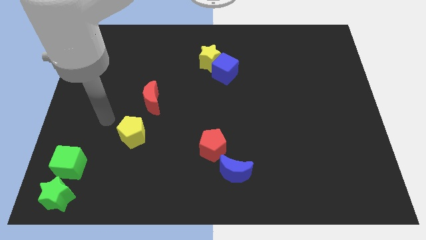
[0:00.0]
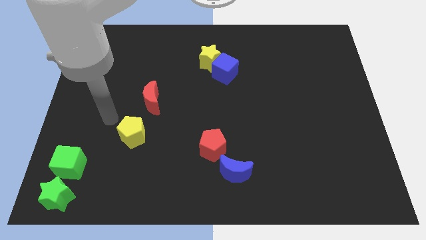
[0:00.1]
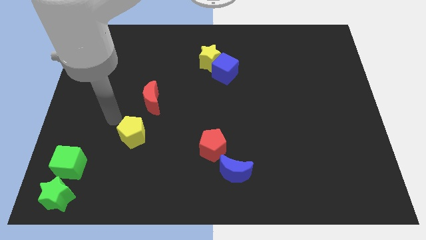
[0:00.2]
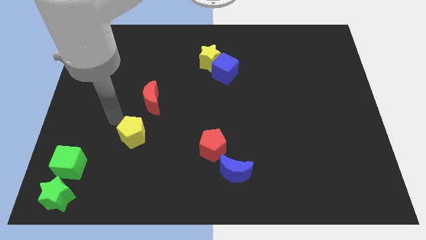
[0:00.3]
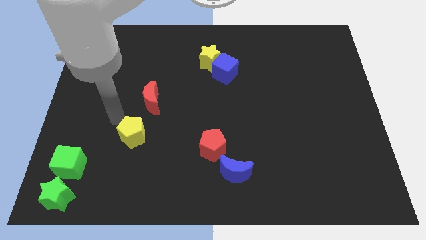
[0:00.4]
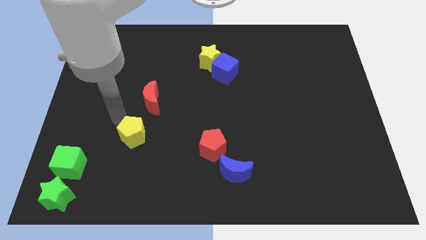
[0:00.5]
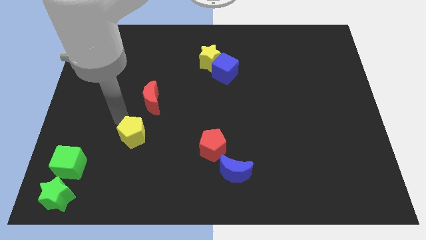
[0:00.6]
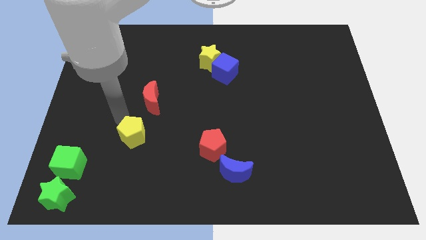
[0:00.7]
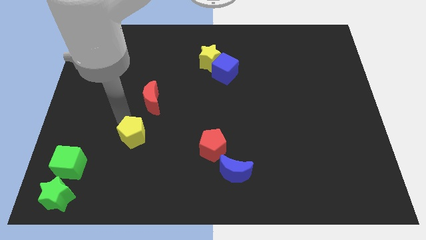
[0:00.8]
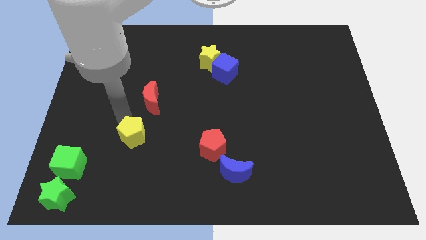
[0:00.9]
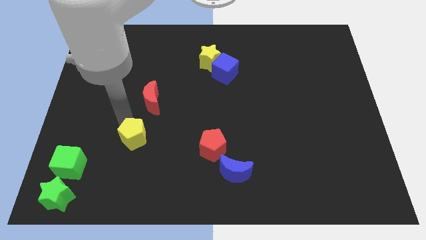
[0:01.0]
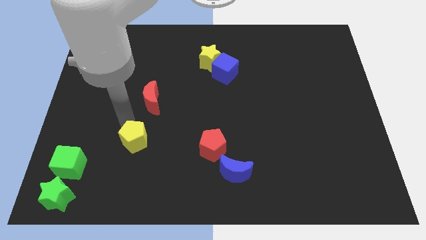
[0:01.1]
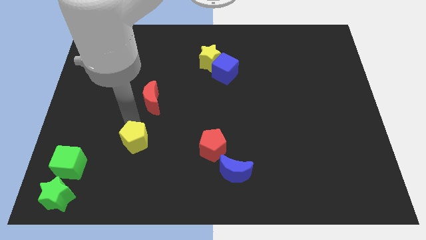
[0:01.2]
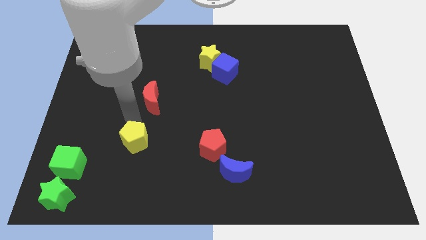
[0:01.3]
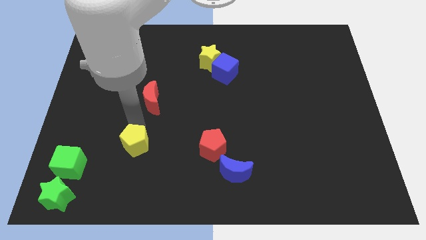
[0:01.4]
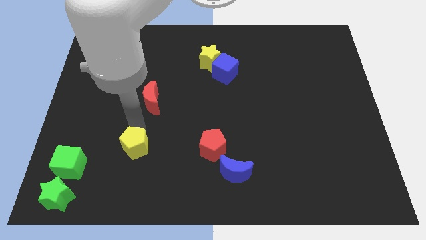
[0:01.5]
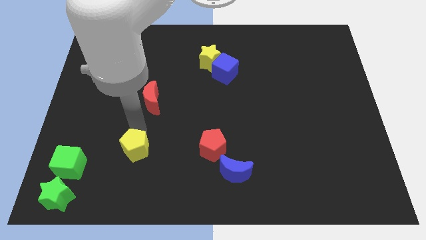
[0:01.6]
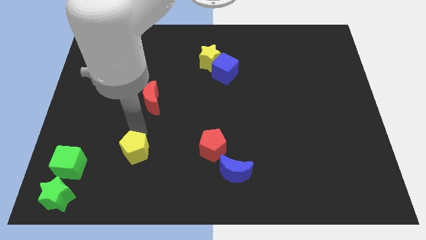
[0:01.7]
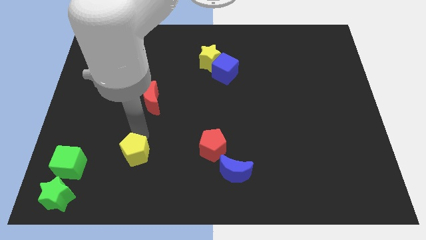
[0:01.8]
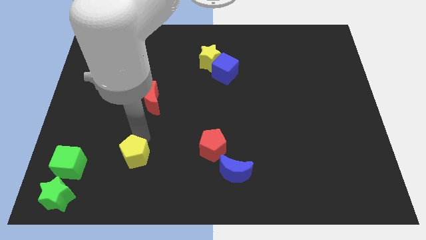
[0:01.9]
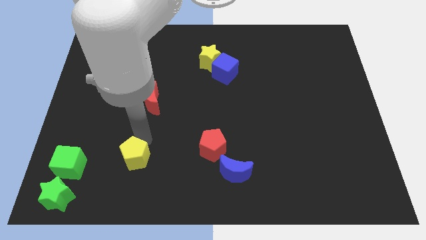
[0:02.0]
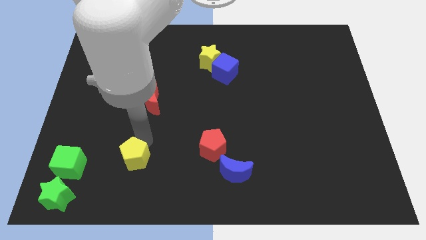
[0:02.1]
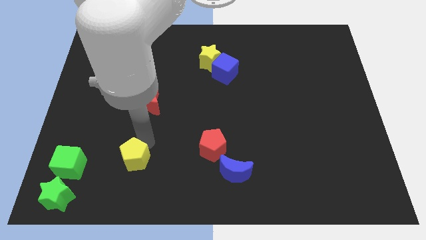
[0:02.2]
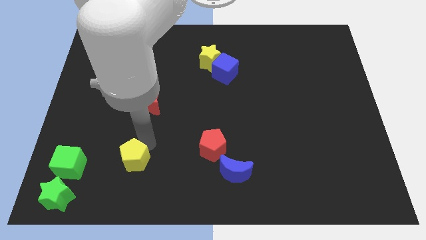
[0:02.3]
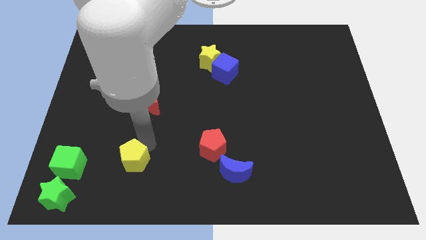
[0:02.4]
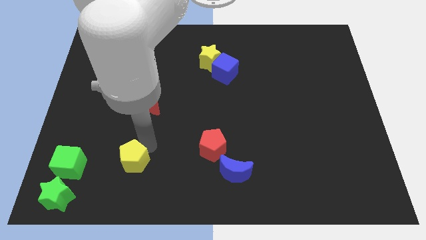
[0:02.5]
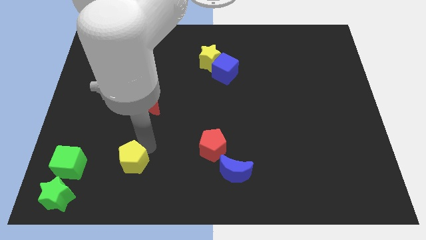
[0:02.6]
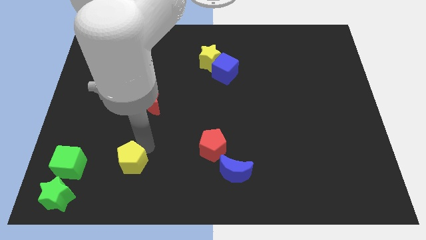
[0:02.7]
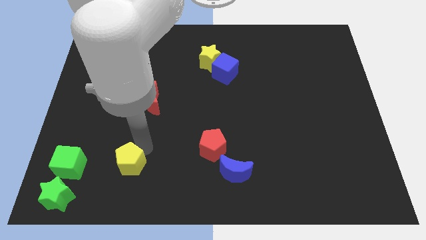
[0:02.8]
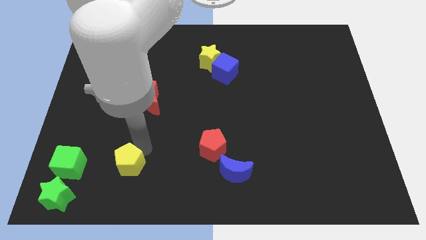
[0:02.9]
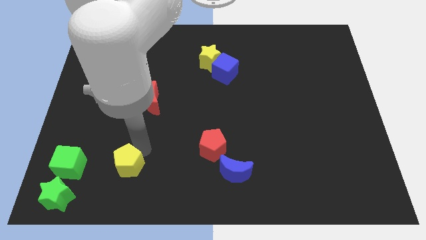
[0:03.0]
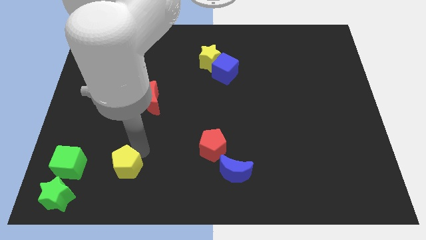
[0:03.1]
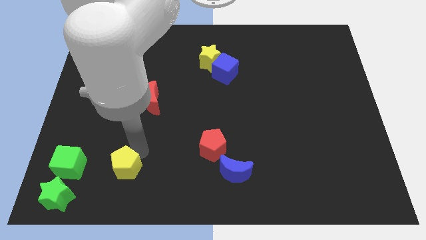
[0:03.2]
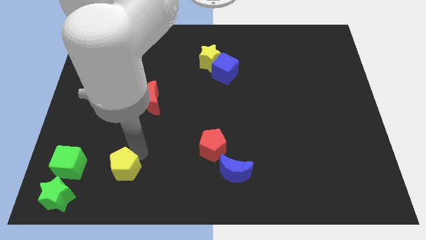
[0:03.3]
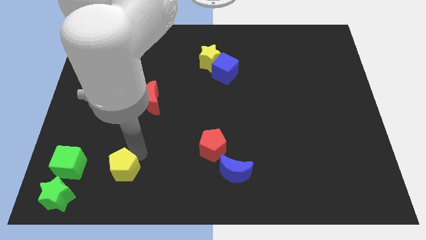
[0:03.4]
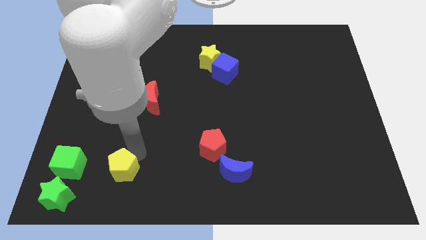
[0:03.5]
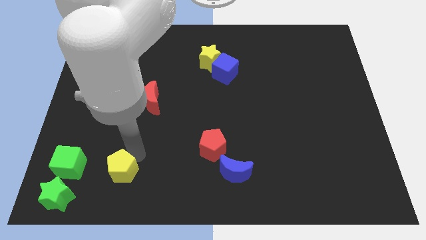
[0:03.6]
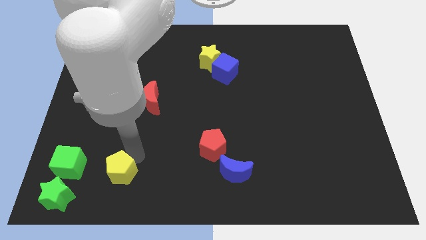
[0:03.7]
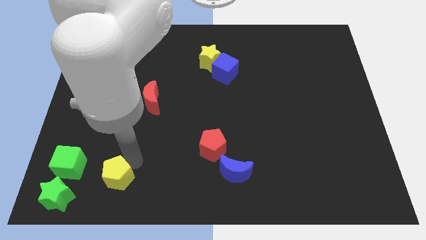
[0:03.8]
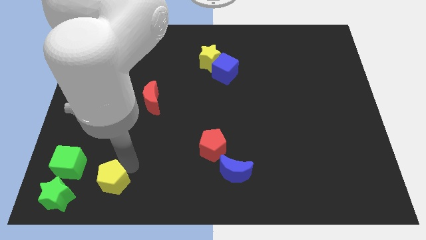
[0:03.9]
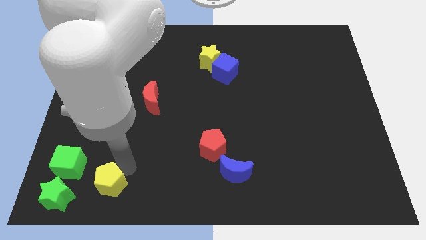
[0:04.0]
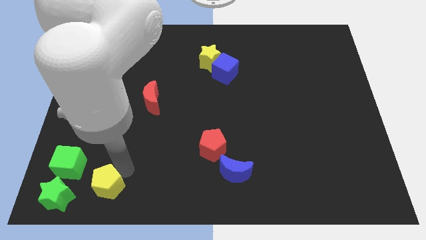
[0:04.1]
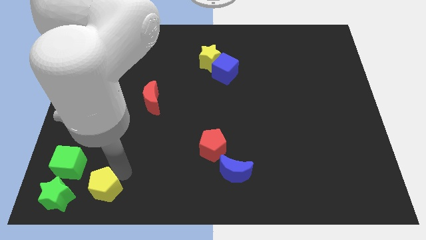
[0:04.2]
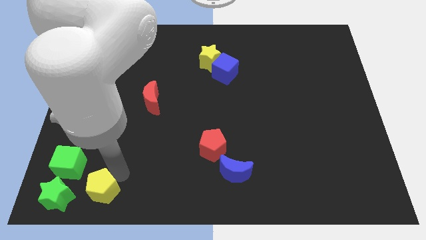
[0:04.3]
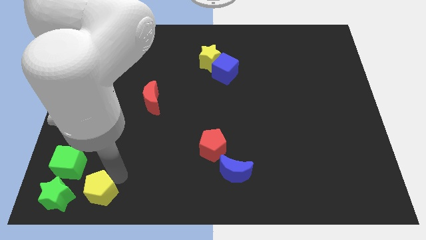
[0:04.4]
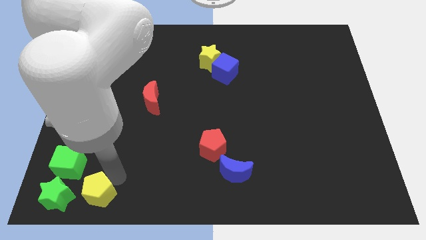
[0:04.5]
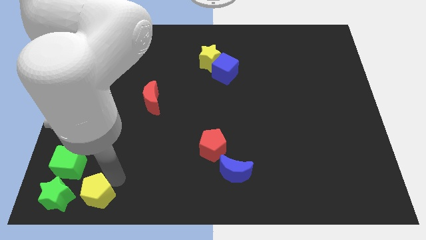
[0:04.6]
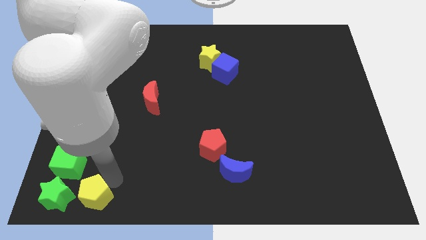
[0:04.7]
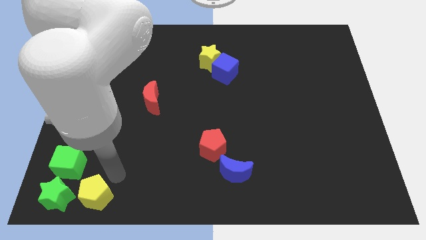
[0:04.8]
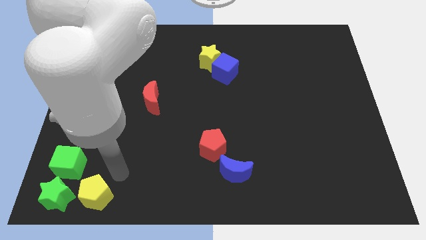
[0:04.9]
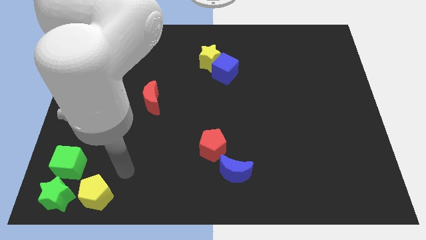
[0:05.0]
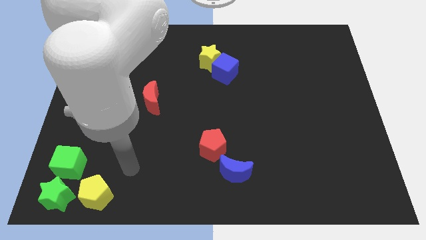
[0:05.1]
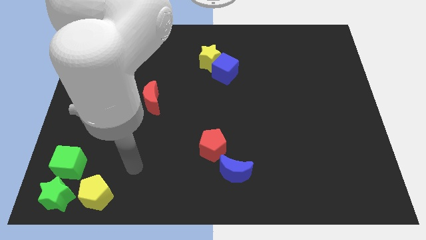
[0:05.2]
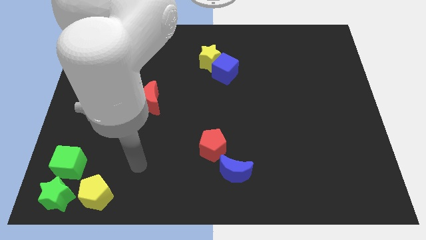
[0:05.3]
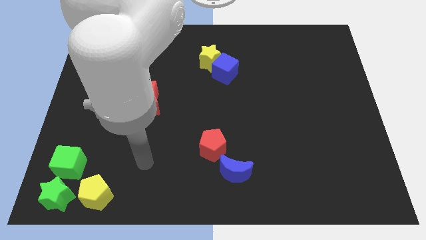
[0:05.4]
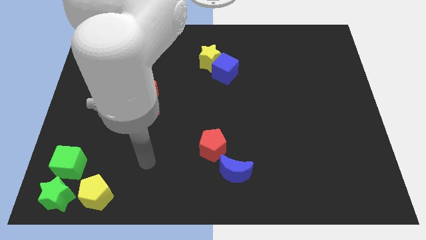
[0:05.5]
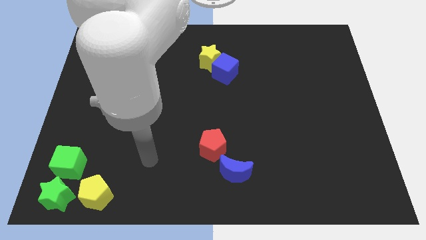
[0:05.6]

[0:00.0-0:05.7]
move yellow pentagon to the right of green star

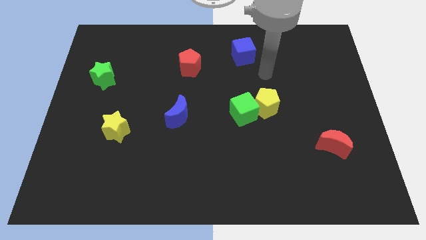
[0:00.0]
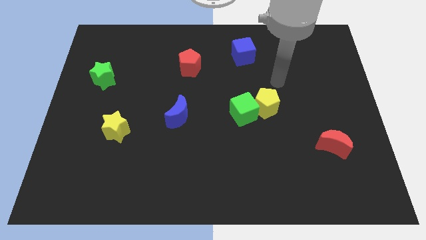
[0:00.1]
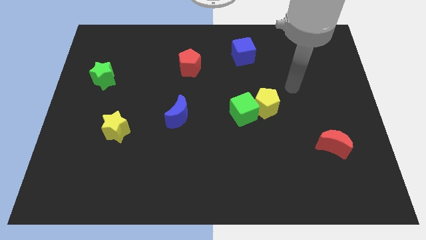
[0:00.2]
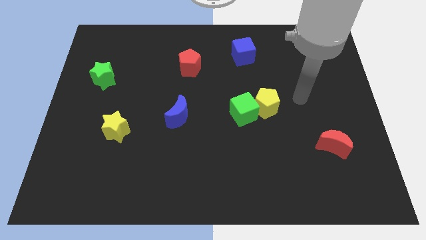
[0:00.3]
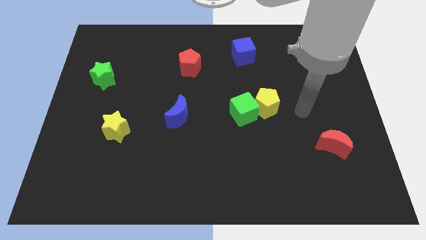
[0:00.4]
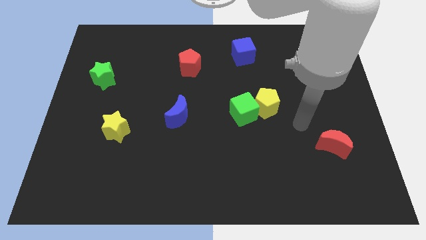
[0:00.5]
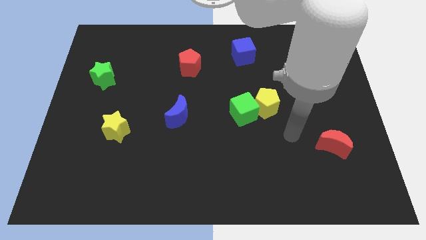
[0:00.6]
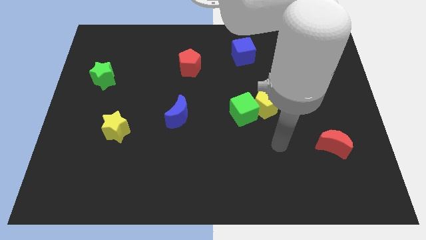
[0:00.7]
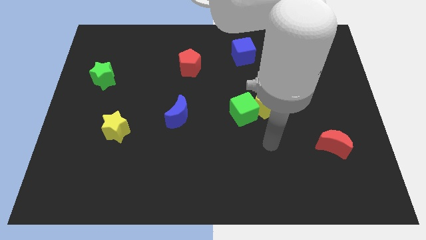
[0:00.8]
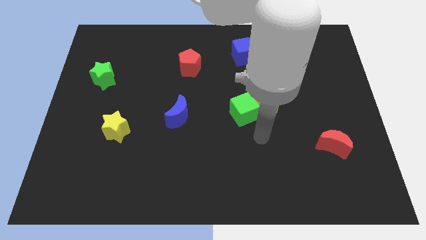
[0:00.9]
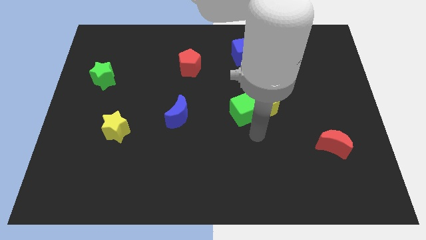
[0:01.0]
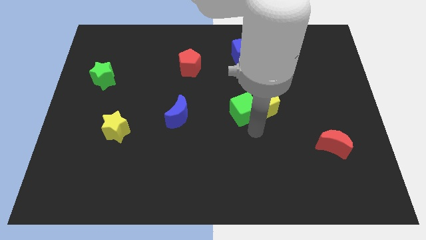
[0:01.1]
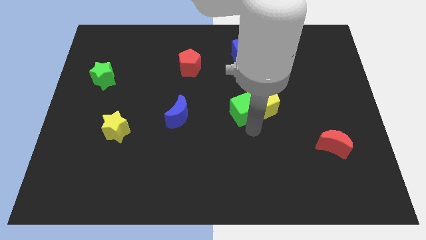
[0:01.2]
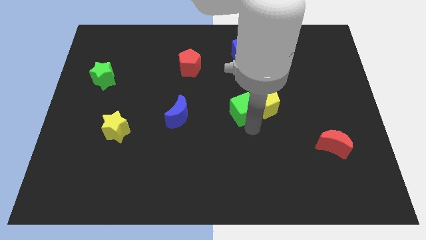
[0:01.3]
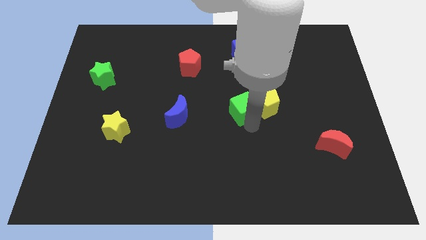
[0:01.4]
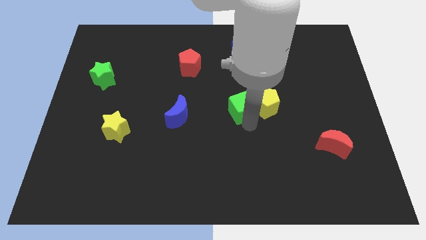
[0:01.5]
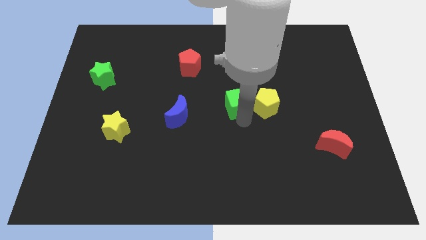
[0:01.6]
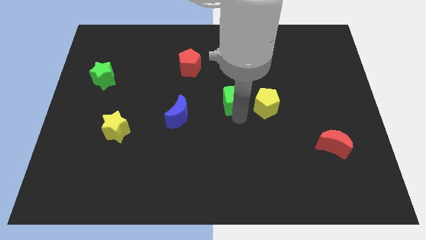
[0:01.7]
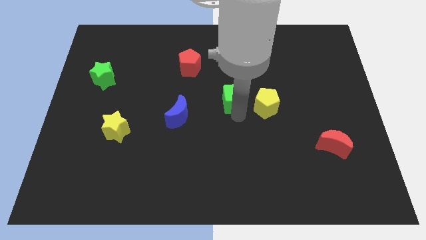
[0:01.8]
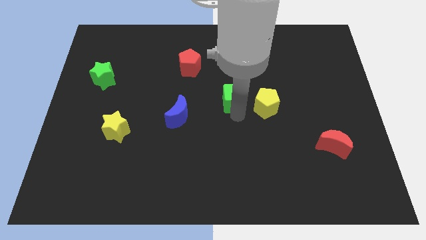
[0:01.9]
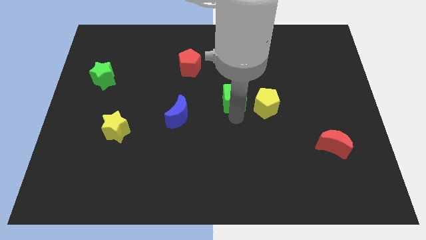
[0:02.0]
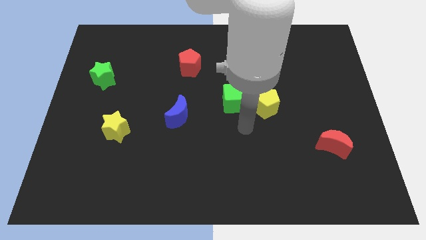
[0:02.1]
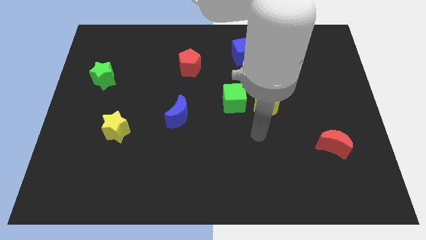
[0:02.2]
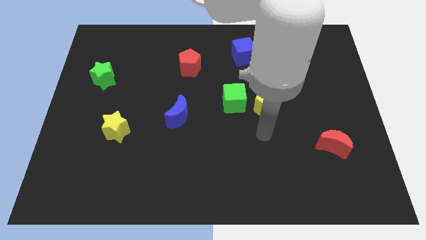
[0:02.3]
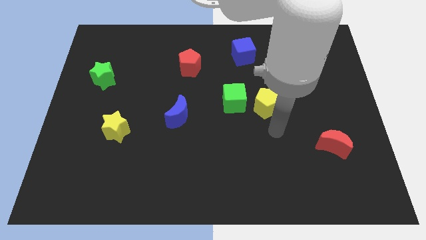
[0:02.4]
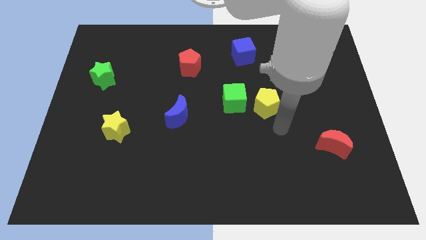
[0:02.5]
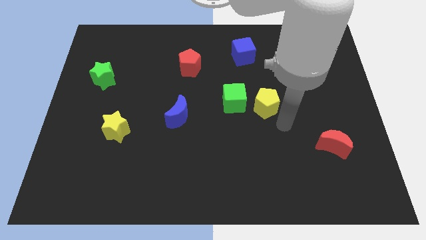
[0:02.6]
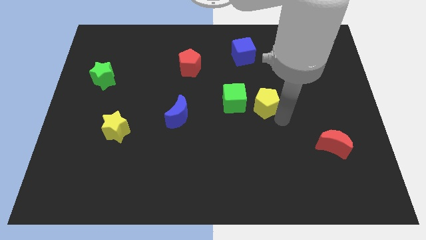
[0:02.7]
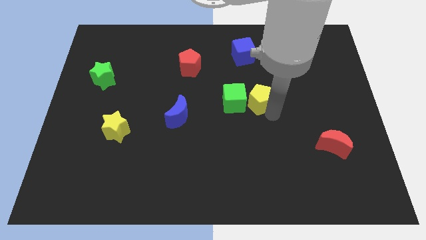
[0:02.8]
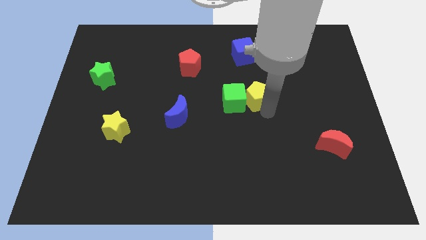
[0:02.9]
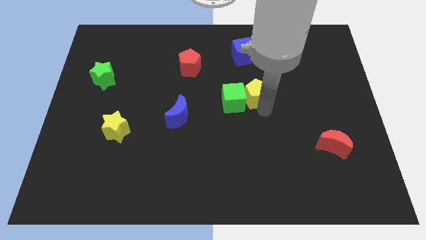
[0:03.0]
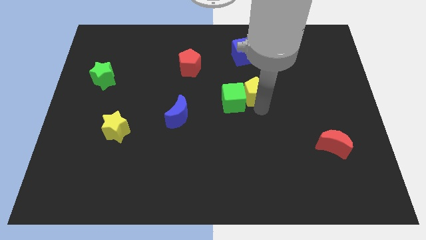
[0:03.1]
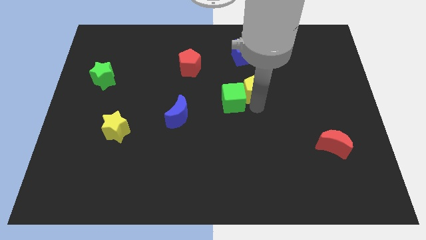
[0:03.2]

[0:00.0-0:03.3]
move the green cube and the yellow pentagon slightly towards the top of the board

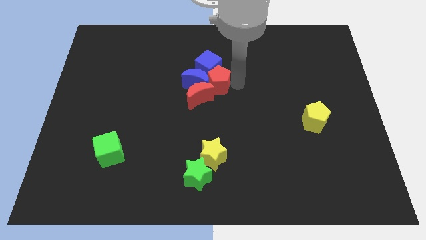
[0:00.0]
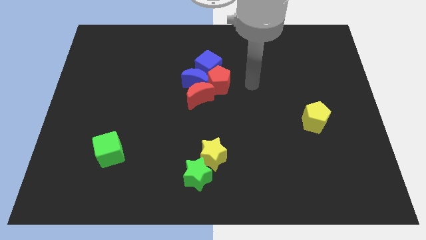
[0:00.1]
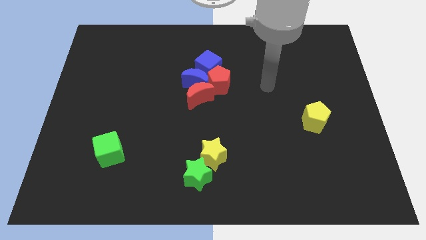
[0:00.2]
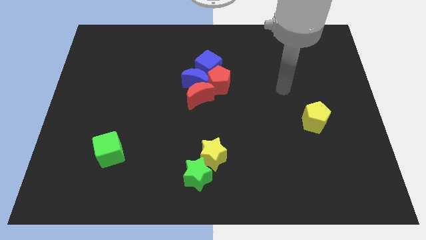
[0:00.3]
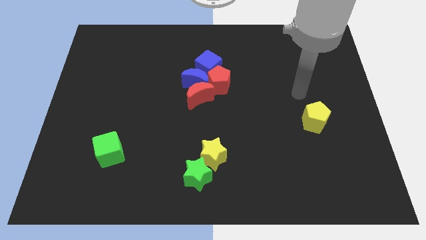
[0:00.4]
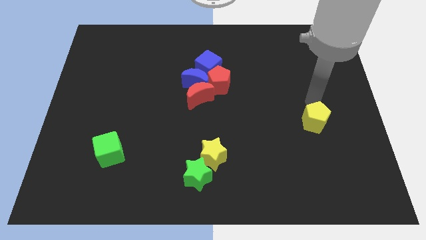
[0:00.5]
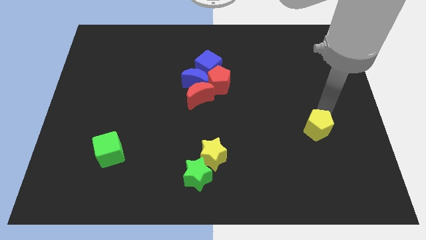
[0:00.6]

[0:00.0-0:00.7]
move the arm away from the red pentagon
